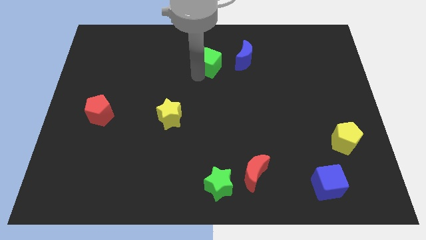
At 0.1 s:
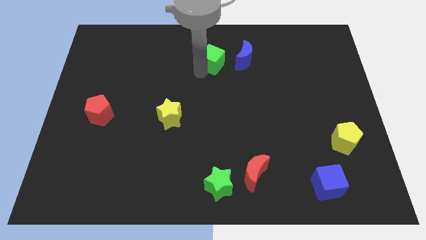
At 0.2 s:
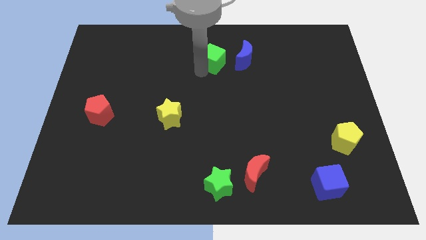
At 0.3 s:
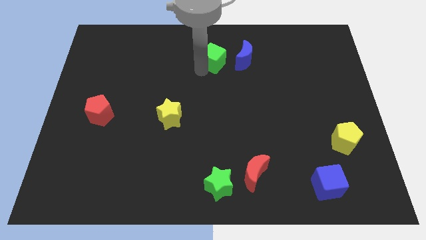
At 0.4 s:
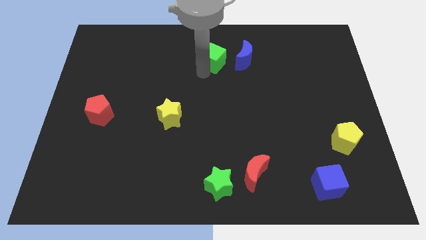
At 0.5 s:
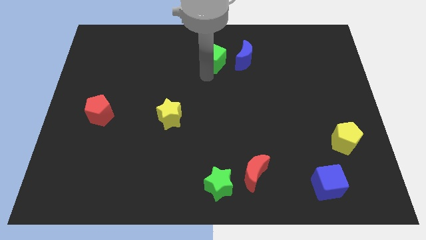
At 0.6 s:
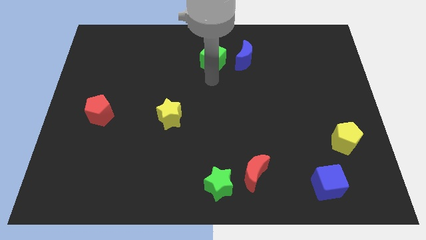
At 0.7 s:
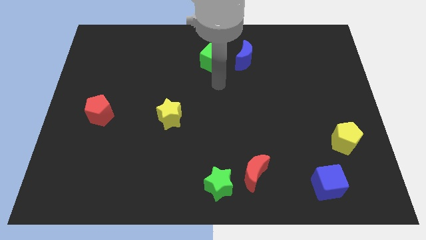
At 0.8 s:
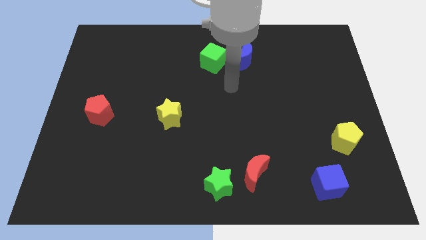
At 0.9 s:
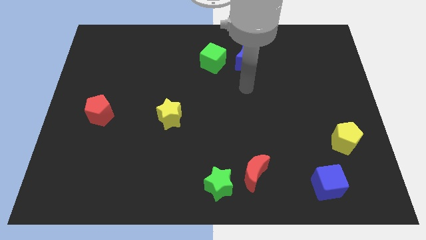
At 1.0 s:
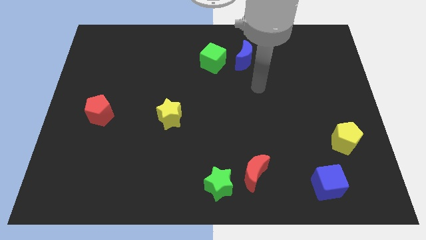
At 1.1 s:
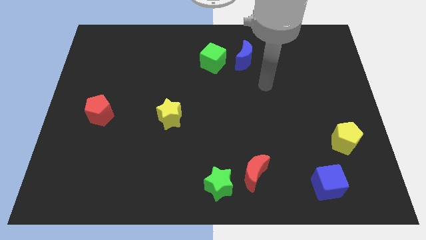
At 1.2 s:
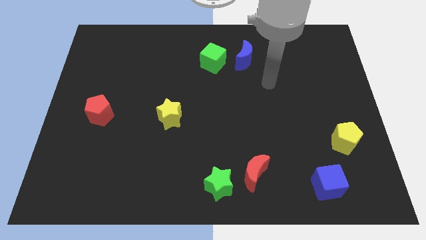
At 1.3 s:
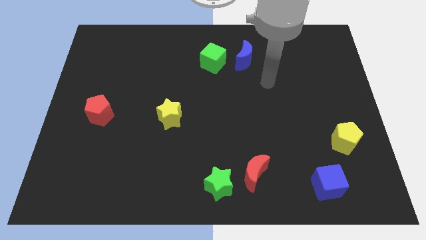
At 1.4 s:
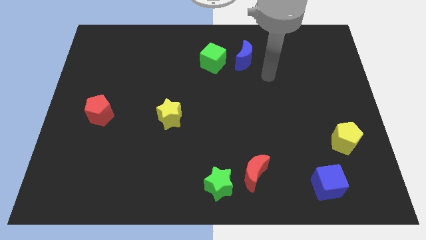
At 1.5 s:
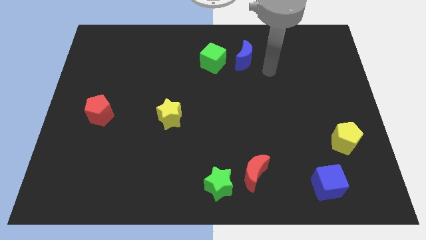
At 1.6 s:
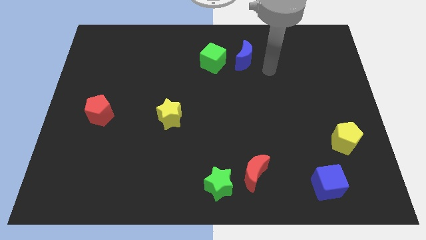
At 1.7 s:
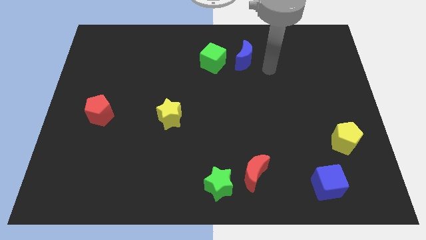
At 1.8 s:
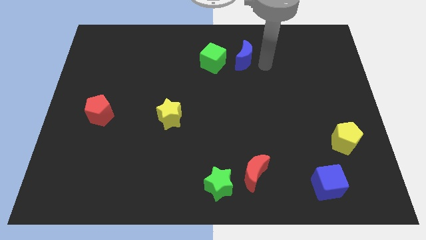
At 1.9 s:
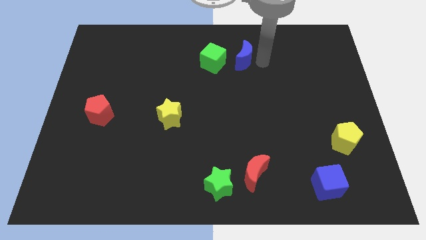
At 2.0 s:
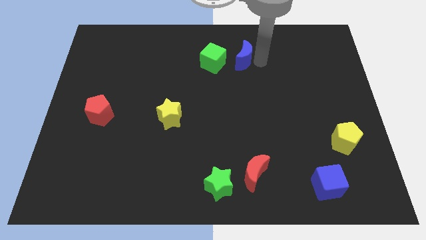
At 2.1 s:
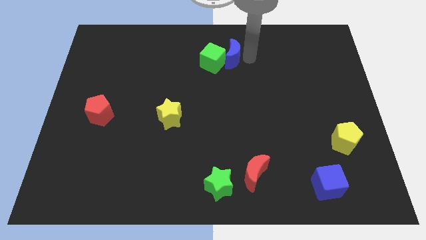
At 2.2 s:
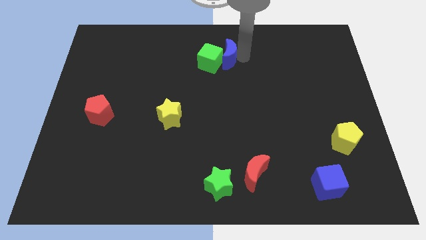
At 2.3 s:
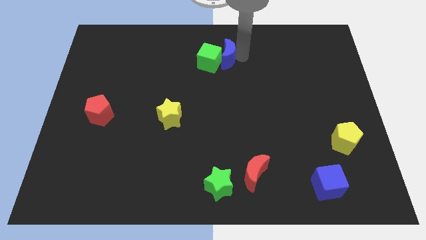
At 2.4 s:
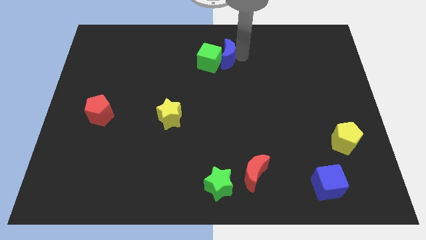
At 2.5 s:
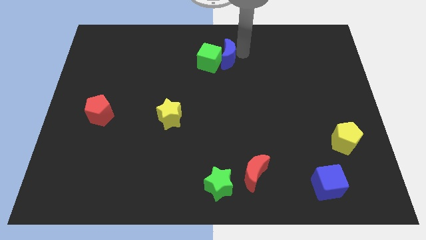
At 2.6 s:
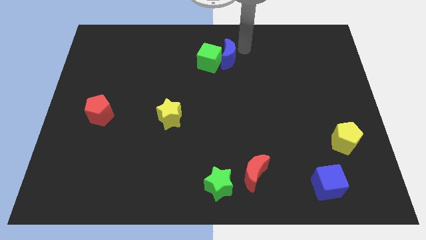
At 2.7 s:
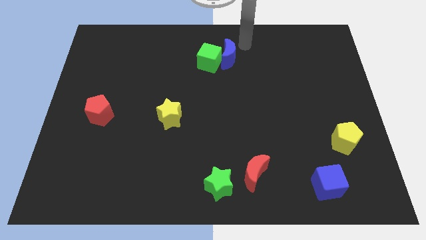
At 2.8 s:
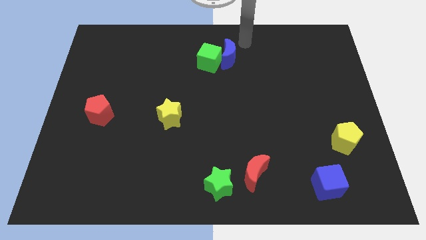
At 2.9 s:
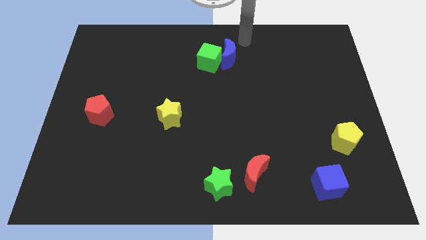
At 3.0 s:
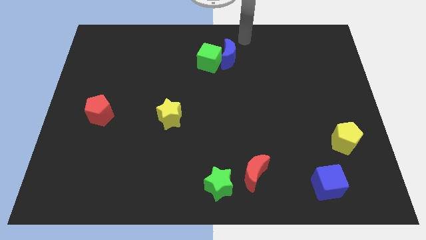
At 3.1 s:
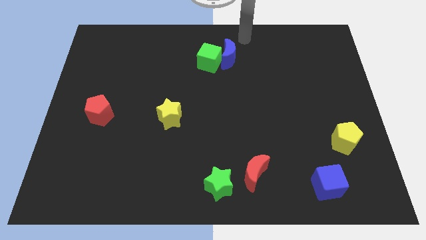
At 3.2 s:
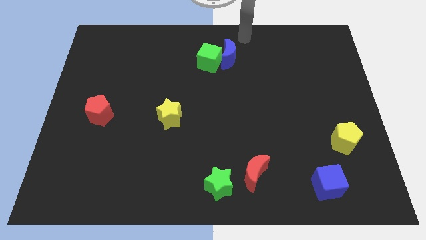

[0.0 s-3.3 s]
push blue moon in to green cube

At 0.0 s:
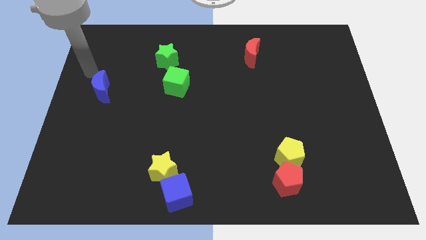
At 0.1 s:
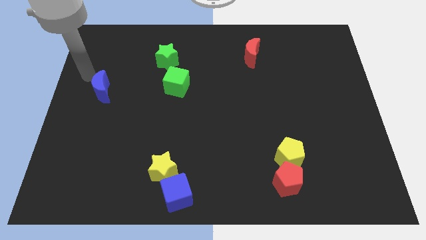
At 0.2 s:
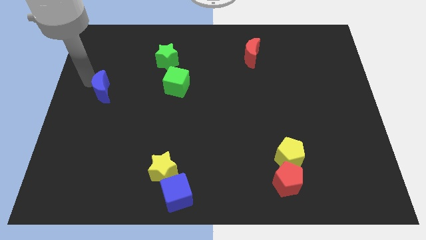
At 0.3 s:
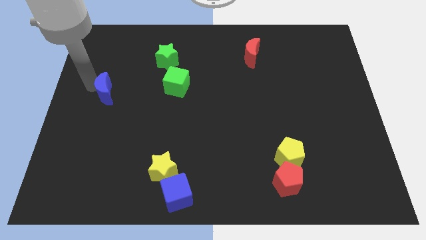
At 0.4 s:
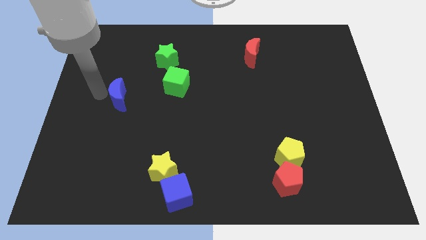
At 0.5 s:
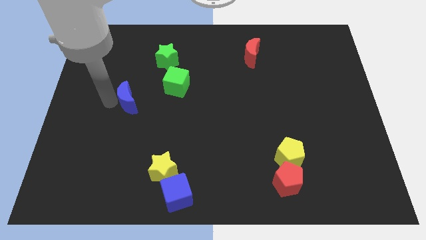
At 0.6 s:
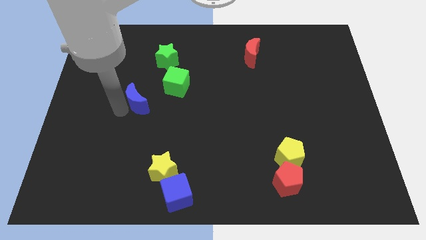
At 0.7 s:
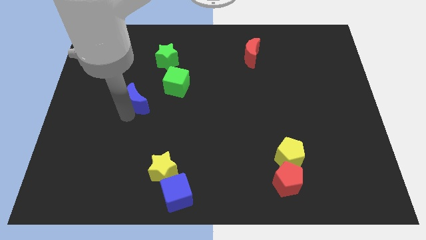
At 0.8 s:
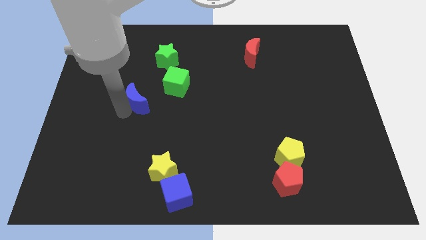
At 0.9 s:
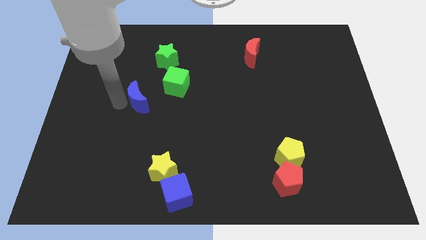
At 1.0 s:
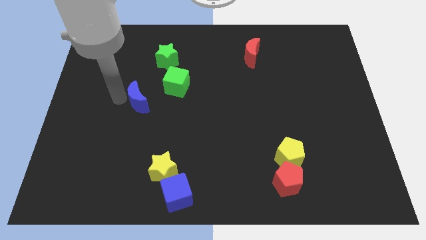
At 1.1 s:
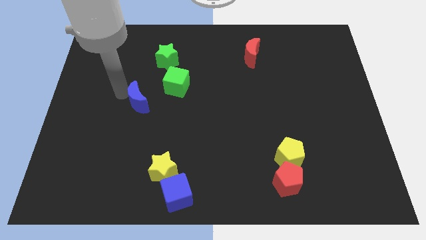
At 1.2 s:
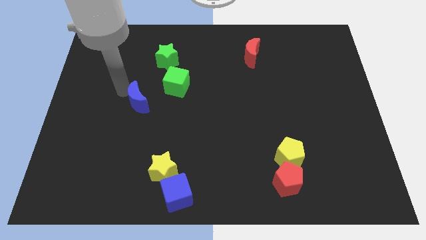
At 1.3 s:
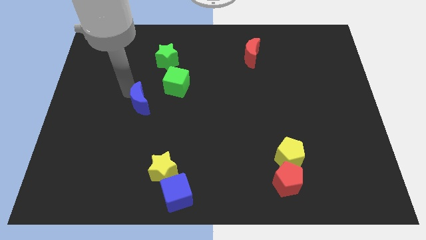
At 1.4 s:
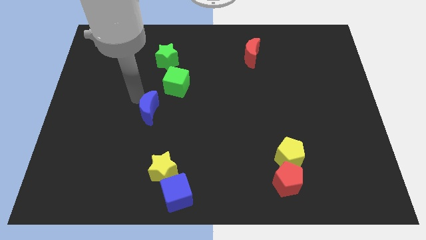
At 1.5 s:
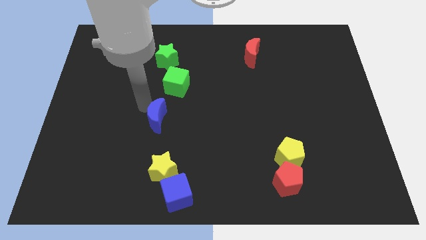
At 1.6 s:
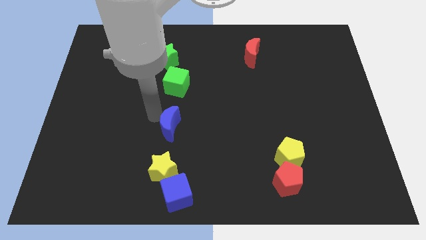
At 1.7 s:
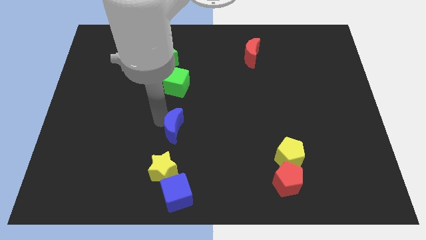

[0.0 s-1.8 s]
place the blue crescent in between green cube and yellow star

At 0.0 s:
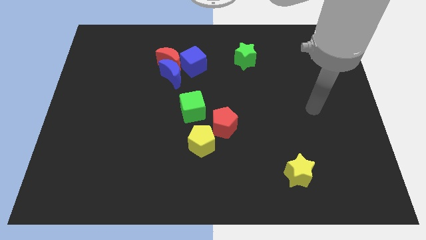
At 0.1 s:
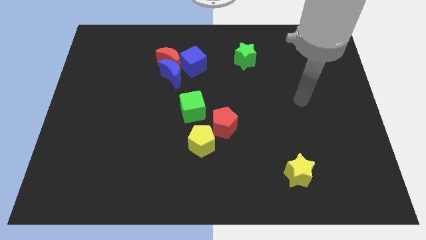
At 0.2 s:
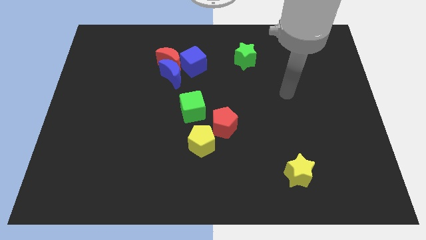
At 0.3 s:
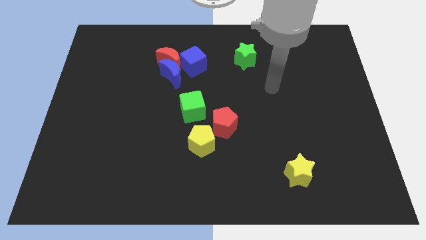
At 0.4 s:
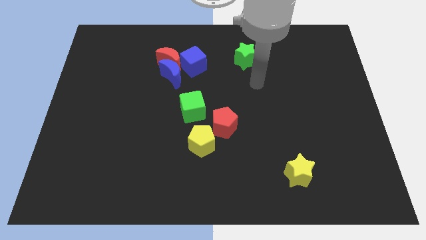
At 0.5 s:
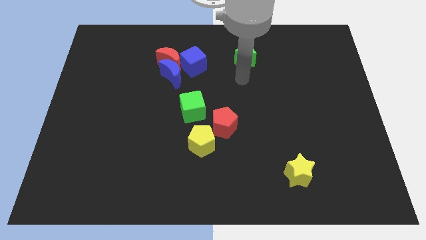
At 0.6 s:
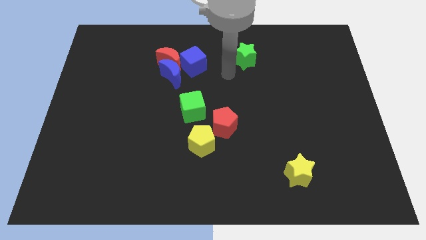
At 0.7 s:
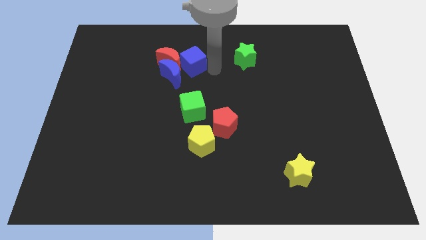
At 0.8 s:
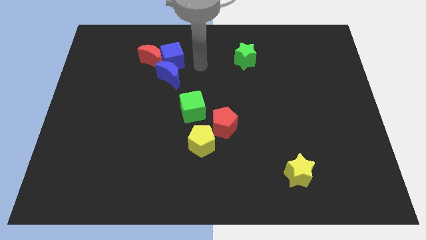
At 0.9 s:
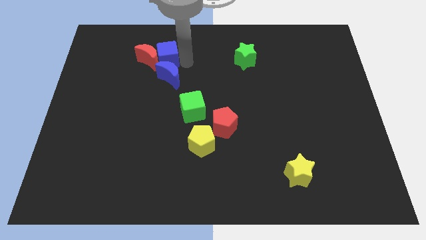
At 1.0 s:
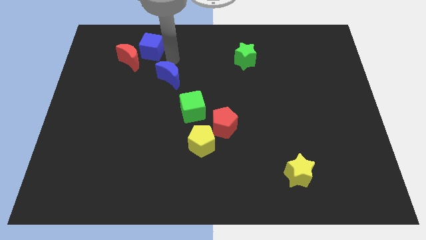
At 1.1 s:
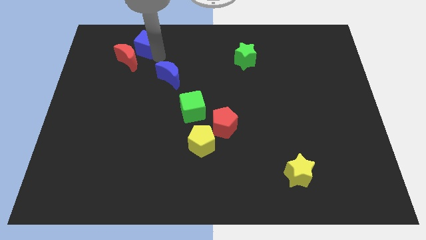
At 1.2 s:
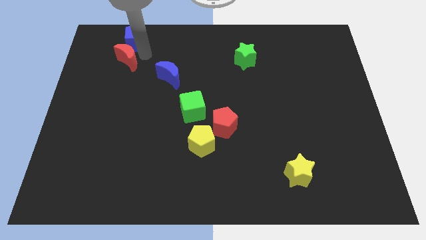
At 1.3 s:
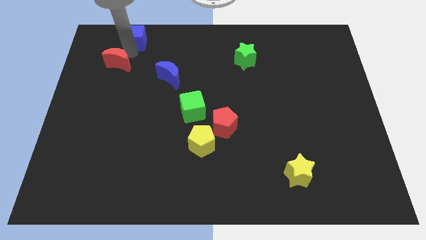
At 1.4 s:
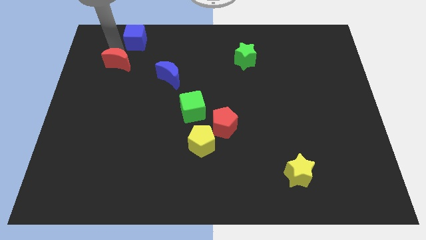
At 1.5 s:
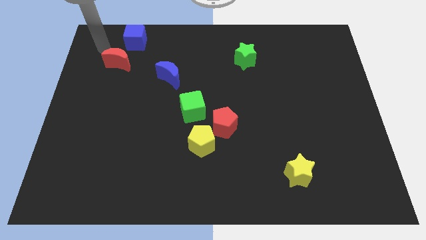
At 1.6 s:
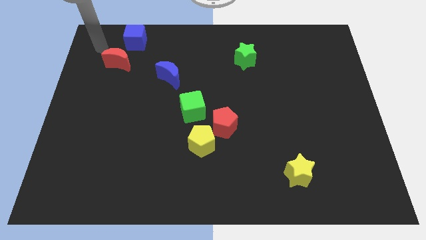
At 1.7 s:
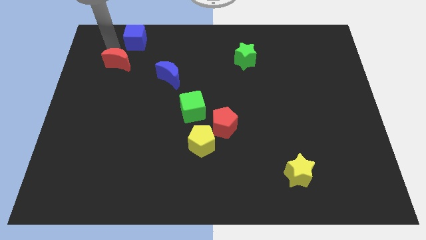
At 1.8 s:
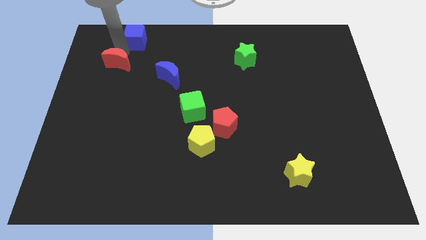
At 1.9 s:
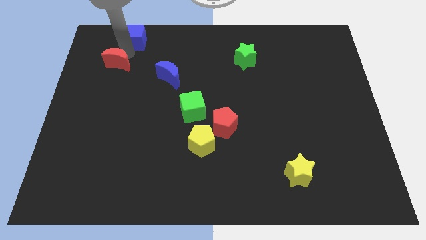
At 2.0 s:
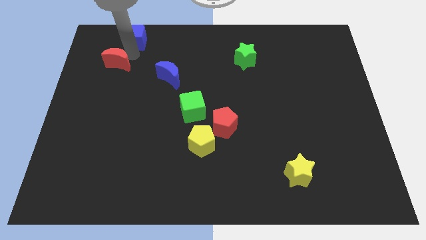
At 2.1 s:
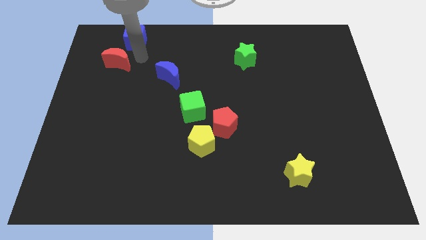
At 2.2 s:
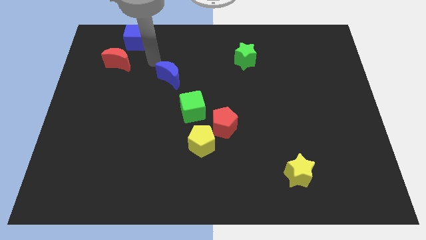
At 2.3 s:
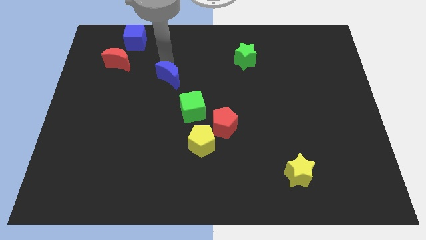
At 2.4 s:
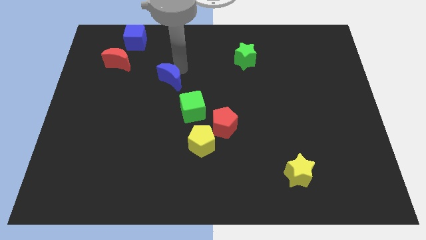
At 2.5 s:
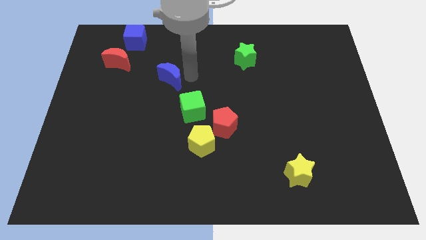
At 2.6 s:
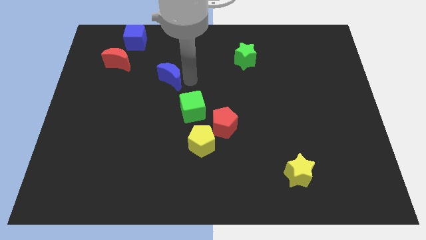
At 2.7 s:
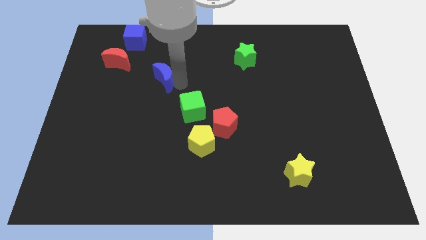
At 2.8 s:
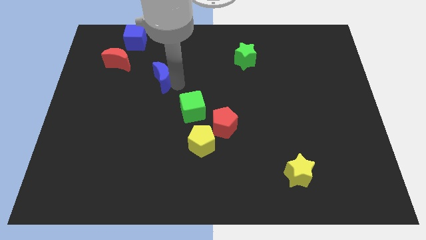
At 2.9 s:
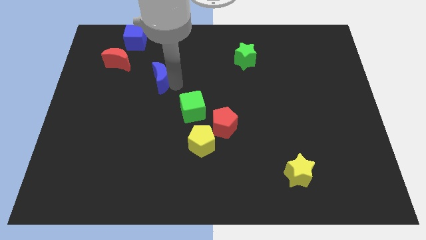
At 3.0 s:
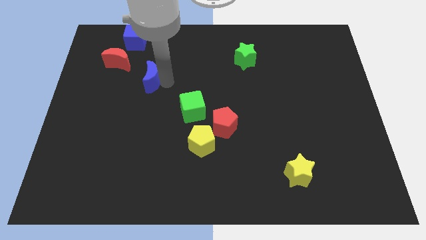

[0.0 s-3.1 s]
move the blue crescent slightly left

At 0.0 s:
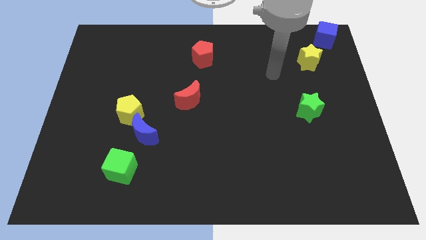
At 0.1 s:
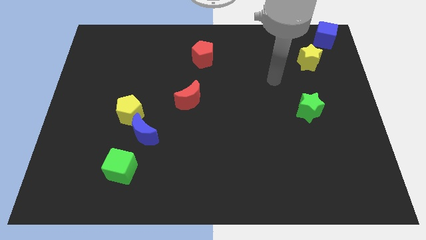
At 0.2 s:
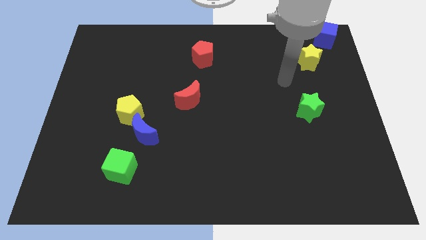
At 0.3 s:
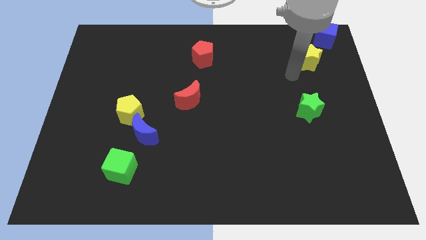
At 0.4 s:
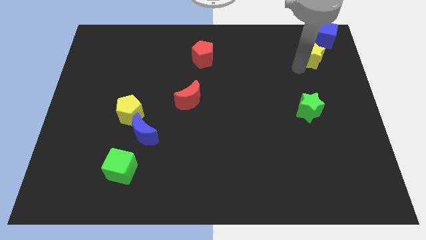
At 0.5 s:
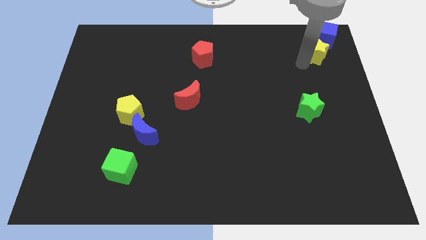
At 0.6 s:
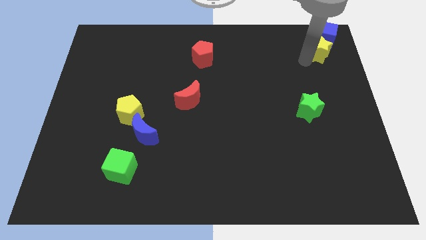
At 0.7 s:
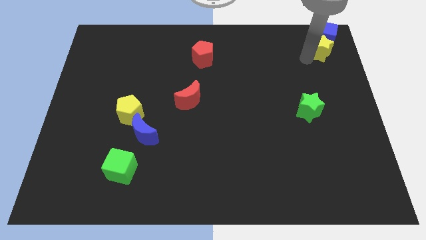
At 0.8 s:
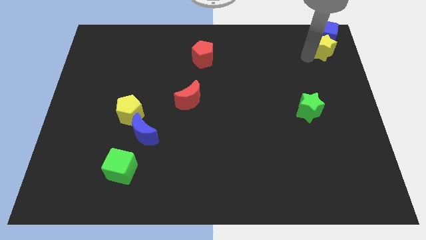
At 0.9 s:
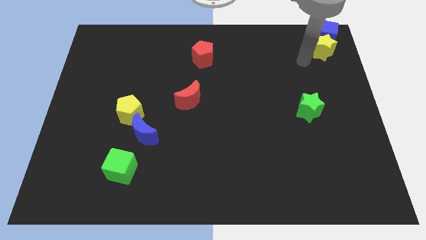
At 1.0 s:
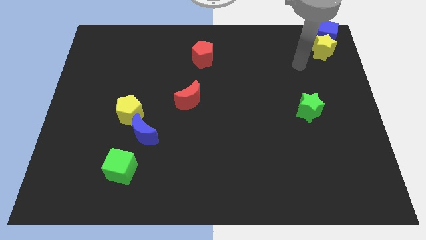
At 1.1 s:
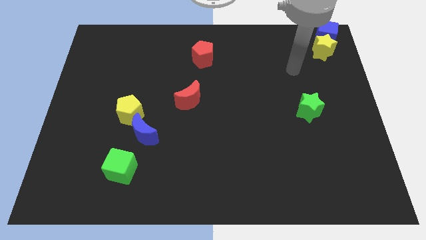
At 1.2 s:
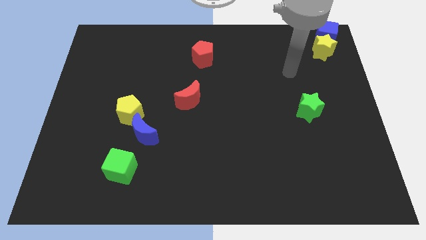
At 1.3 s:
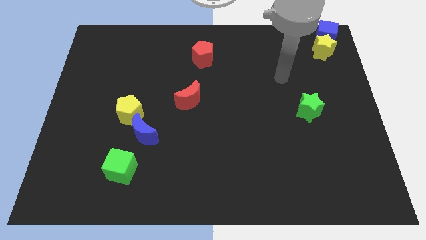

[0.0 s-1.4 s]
push the yellow star into the blue cube
